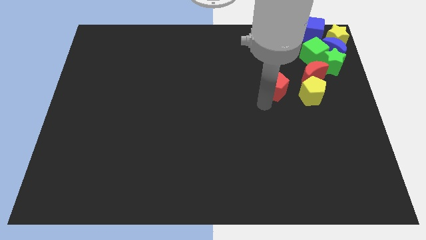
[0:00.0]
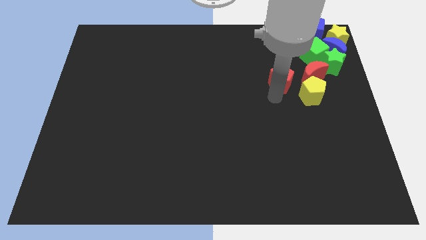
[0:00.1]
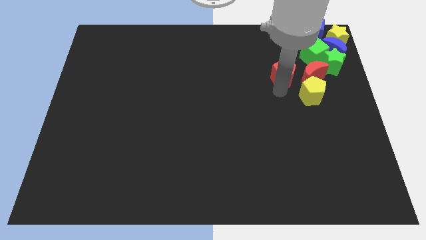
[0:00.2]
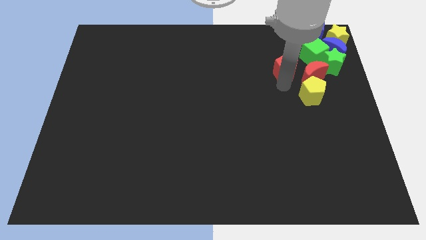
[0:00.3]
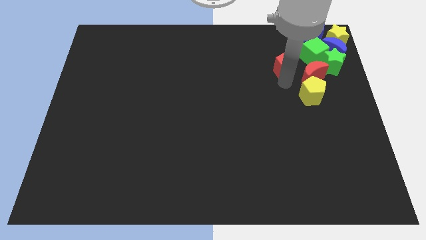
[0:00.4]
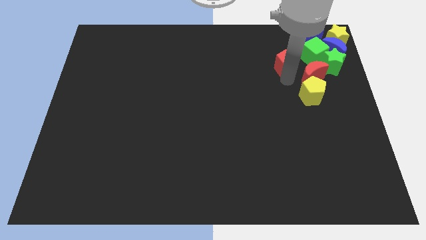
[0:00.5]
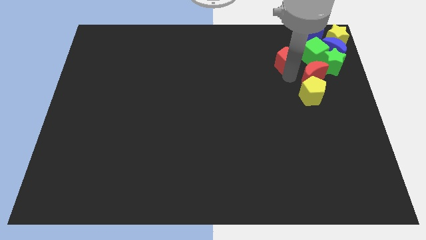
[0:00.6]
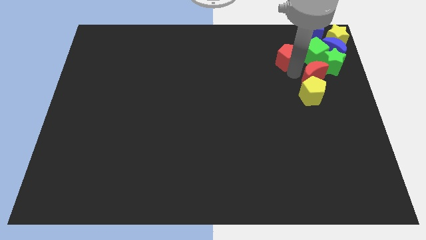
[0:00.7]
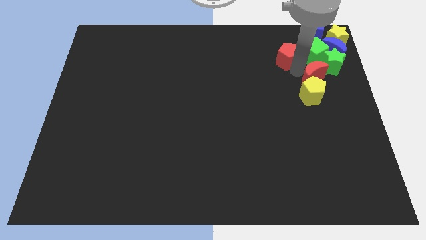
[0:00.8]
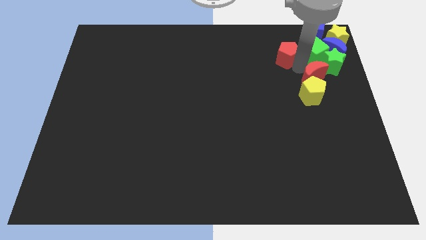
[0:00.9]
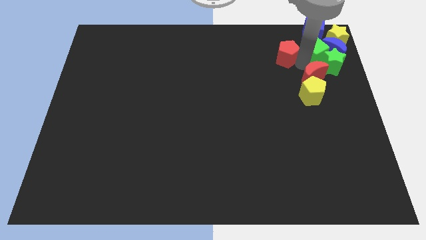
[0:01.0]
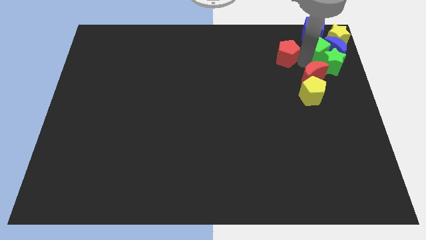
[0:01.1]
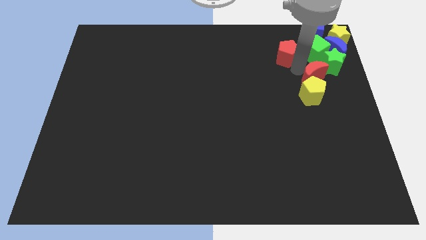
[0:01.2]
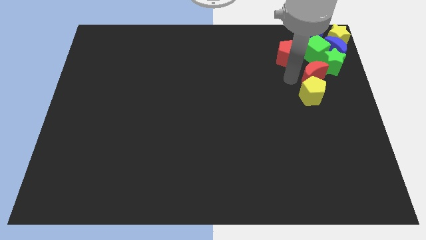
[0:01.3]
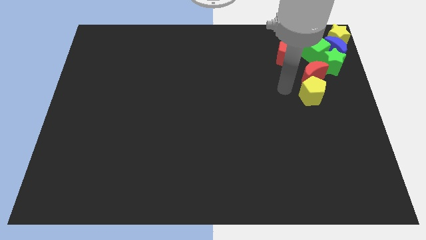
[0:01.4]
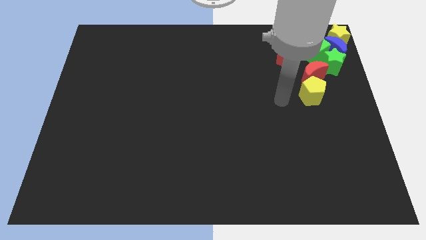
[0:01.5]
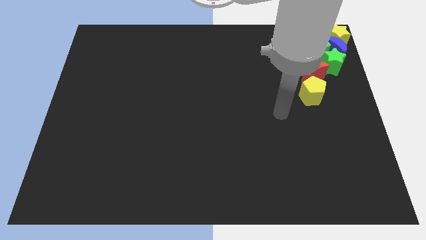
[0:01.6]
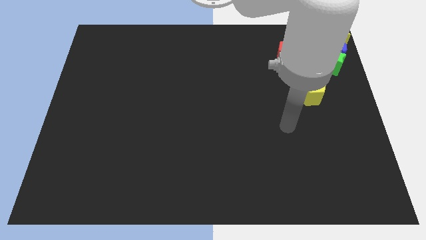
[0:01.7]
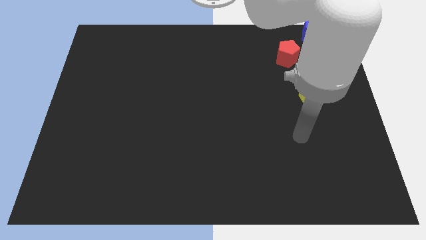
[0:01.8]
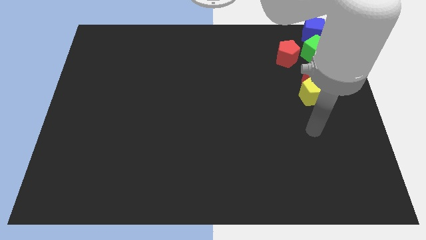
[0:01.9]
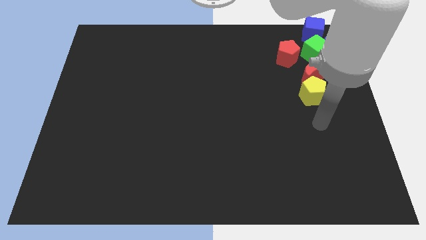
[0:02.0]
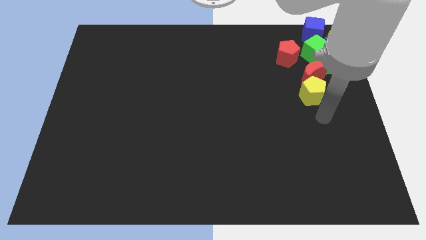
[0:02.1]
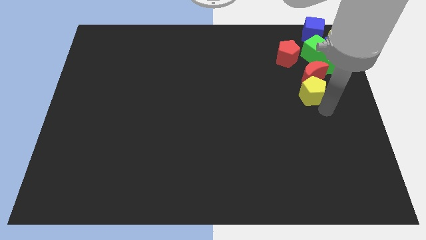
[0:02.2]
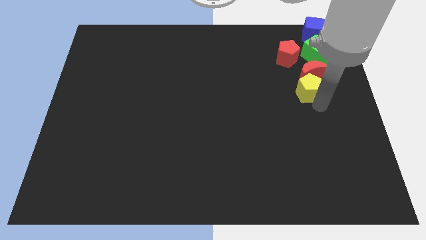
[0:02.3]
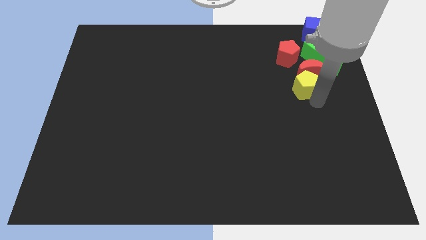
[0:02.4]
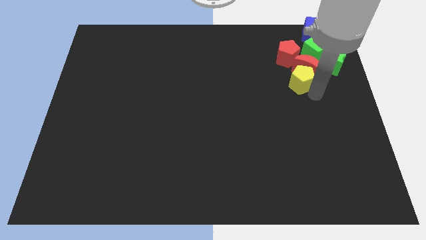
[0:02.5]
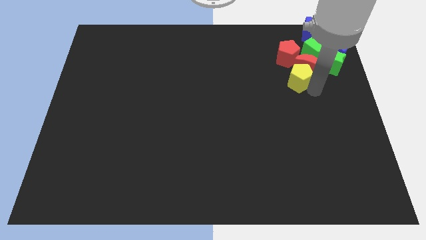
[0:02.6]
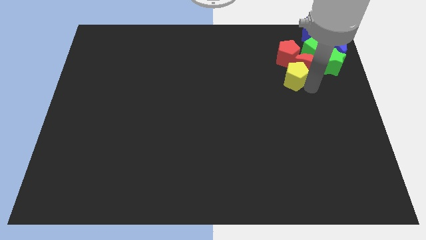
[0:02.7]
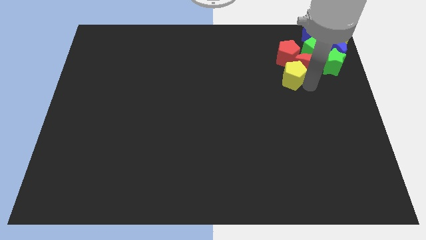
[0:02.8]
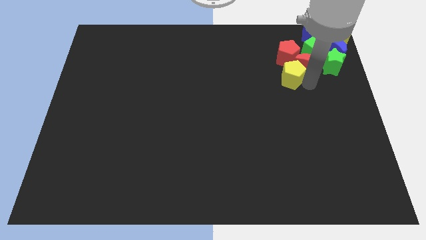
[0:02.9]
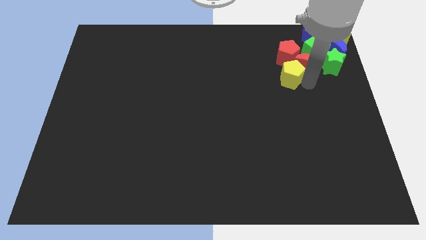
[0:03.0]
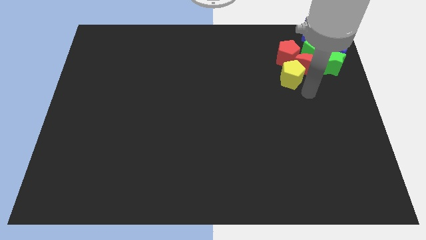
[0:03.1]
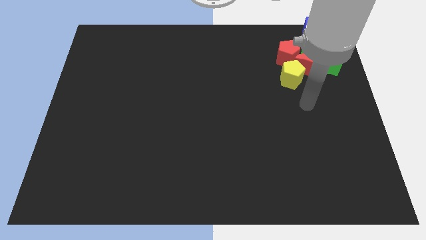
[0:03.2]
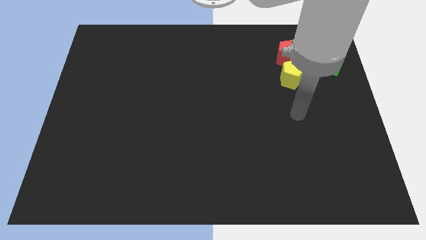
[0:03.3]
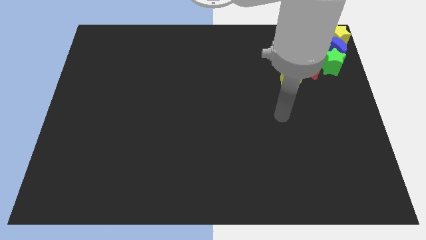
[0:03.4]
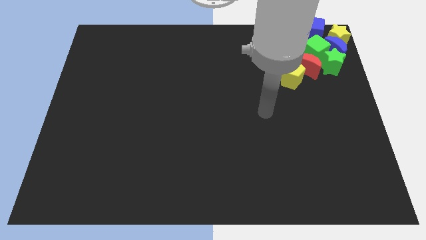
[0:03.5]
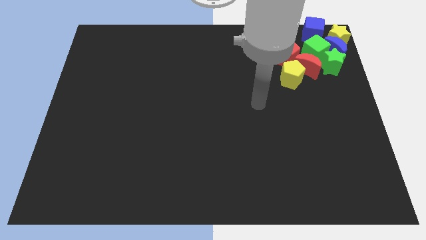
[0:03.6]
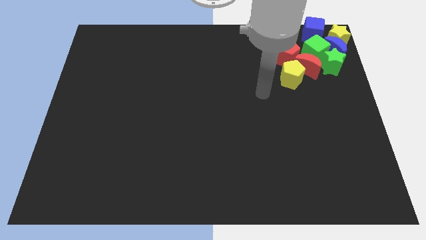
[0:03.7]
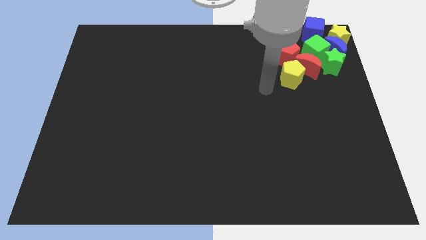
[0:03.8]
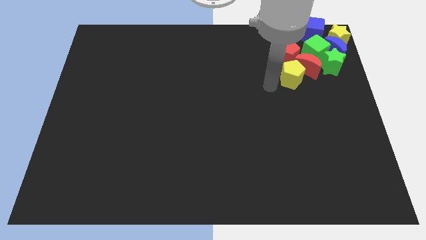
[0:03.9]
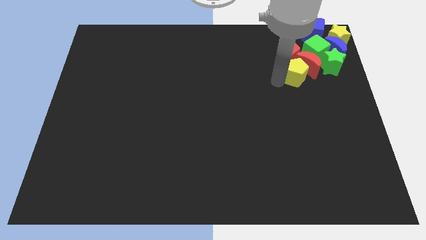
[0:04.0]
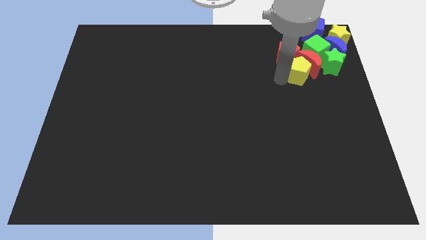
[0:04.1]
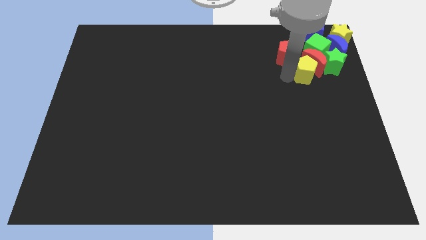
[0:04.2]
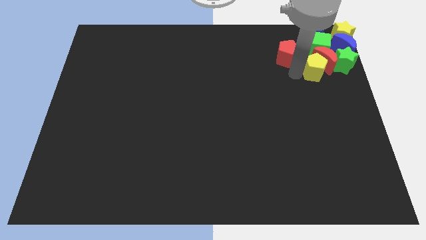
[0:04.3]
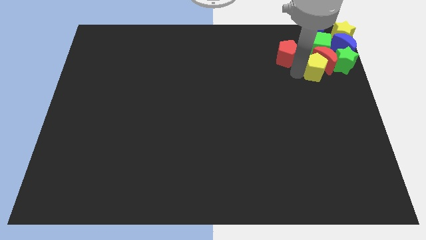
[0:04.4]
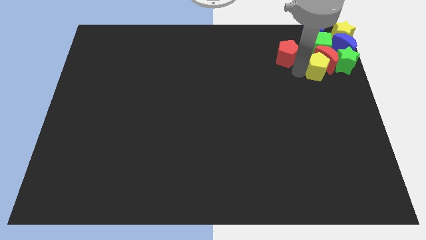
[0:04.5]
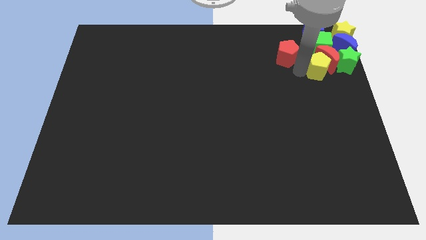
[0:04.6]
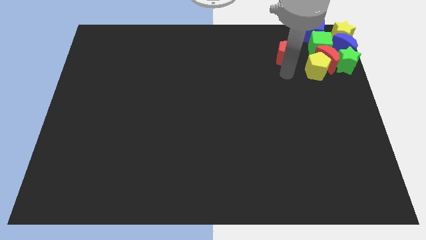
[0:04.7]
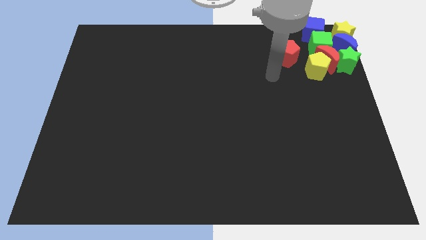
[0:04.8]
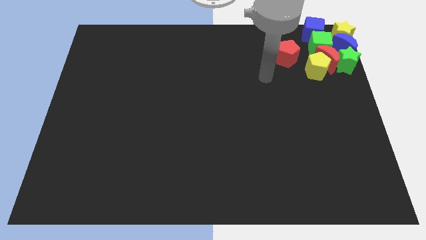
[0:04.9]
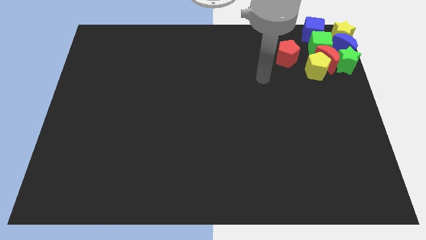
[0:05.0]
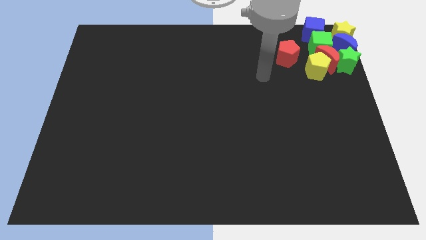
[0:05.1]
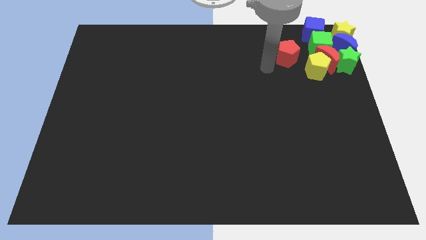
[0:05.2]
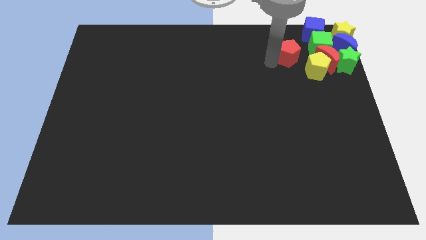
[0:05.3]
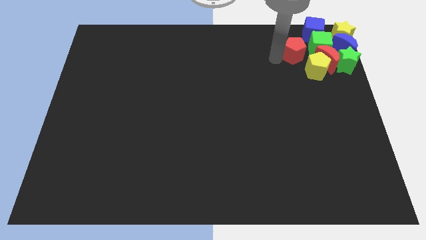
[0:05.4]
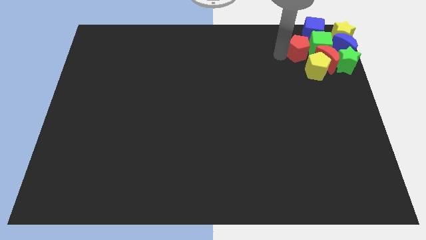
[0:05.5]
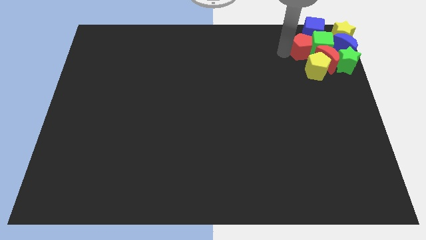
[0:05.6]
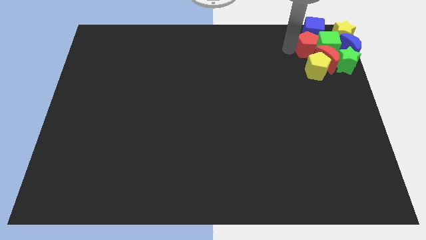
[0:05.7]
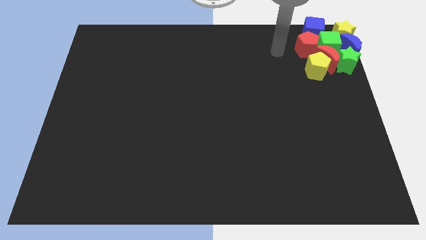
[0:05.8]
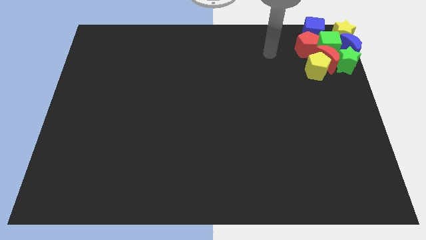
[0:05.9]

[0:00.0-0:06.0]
push the yellow pentagon and red blocks into the group of blocks

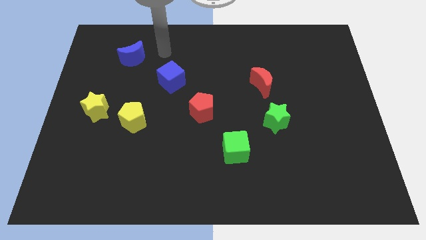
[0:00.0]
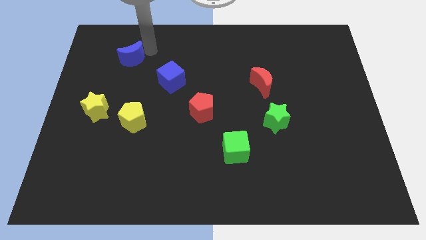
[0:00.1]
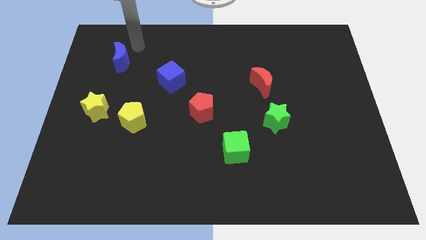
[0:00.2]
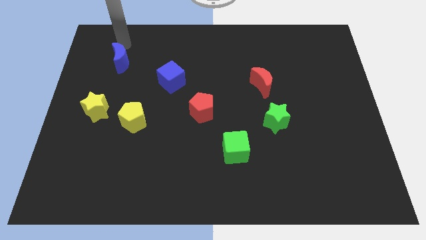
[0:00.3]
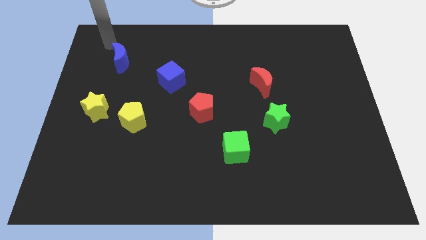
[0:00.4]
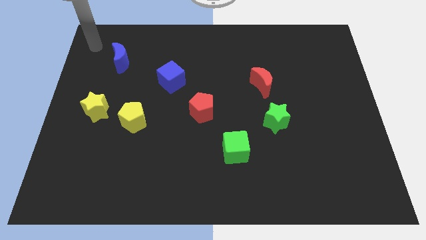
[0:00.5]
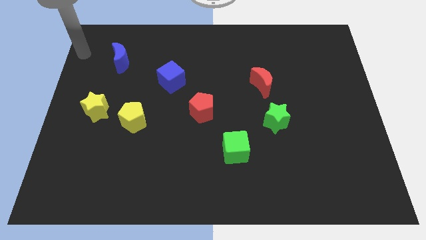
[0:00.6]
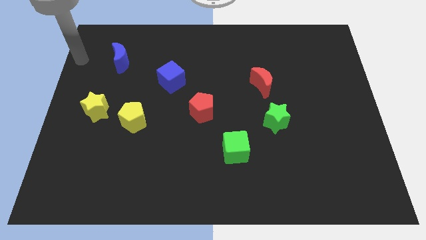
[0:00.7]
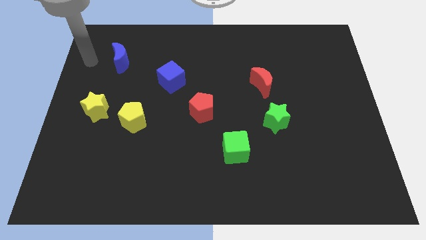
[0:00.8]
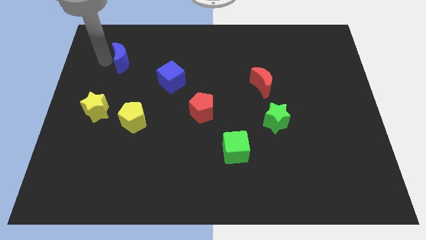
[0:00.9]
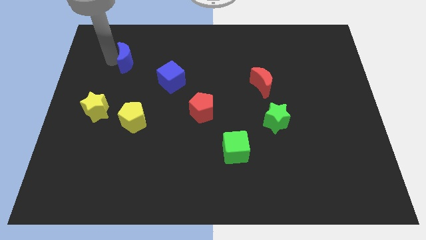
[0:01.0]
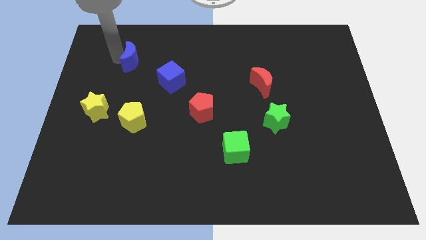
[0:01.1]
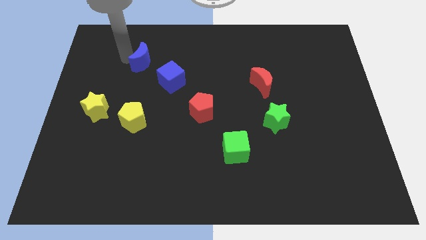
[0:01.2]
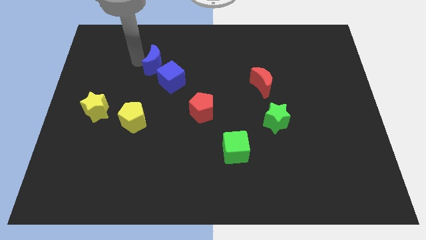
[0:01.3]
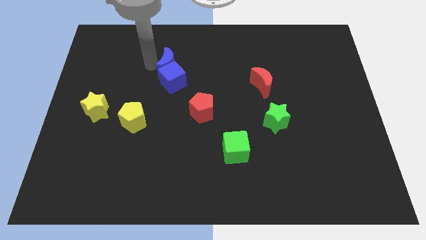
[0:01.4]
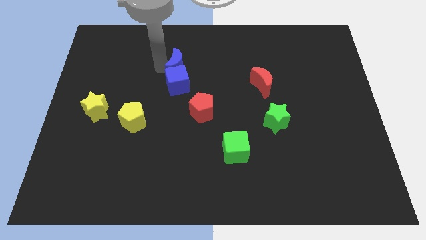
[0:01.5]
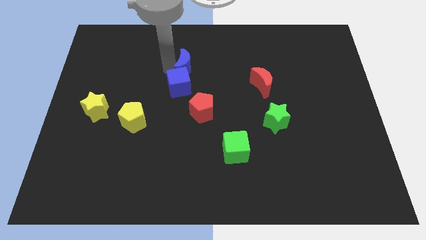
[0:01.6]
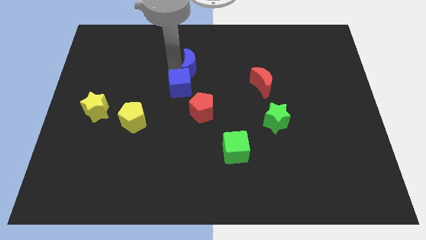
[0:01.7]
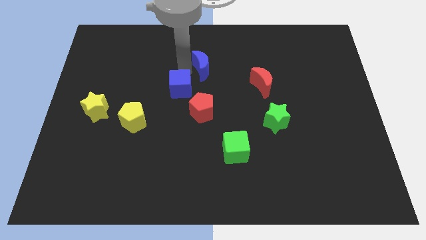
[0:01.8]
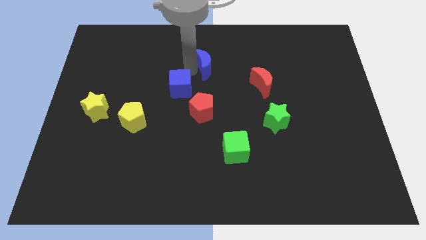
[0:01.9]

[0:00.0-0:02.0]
drag the blue crescent to the top right of the blue cube

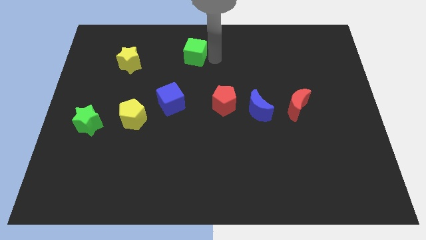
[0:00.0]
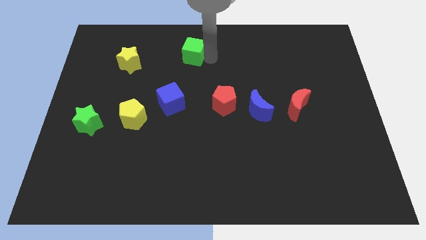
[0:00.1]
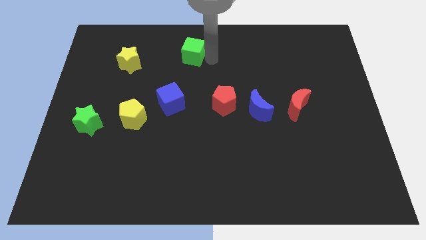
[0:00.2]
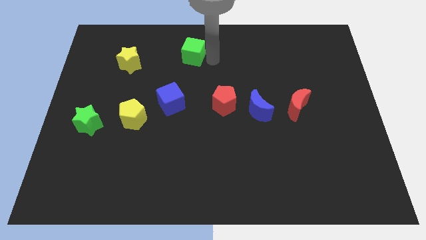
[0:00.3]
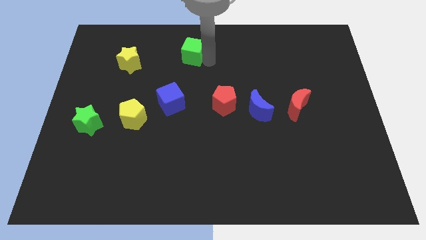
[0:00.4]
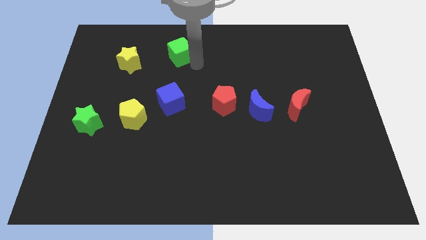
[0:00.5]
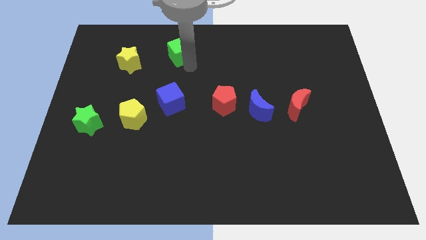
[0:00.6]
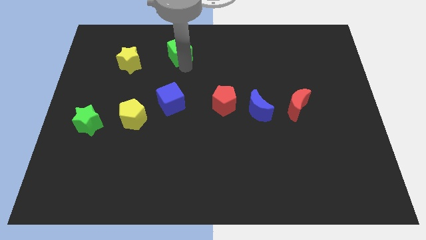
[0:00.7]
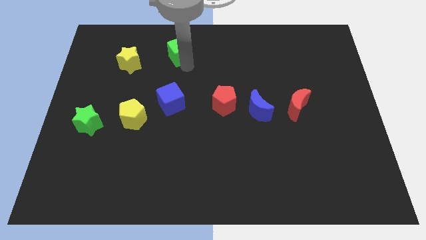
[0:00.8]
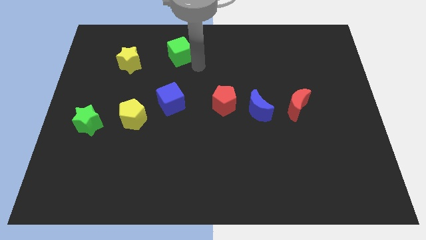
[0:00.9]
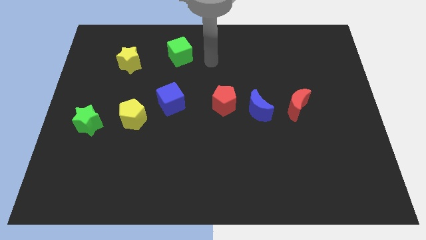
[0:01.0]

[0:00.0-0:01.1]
drag green cube towards left

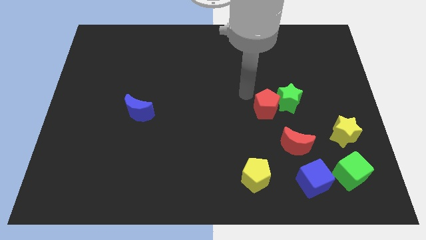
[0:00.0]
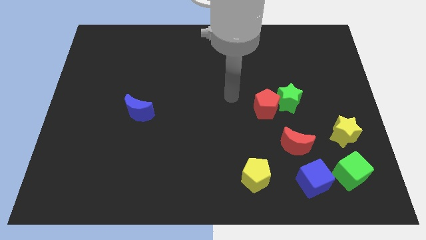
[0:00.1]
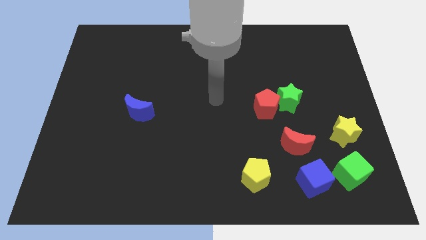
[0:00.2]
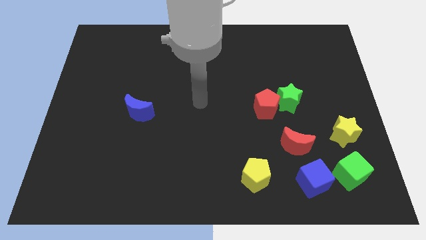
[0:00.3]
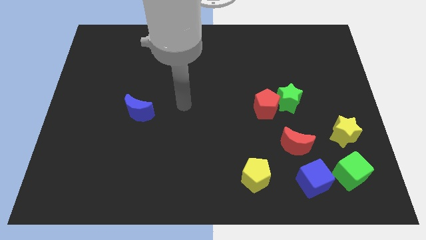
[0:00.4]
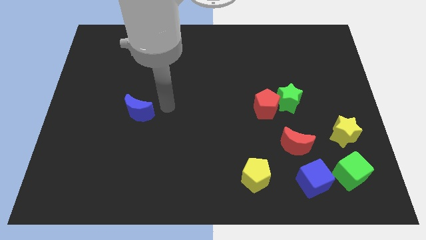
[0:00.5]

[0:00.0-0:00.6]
place your arm at the right of the blue crescent
